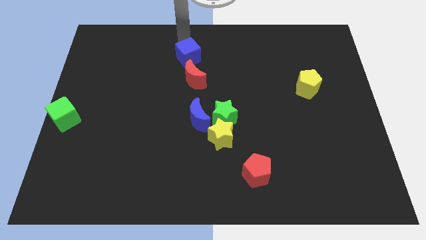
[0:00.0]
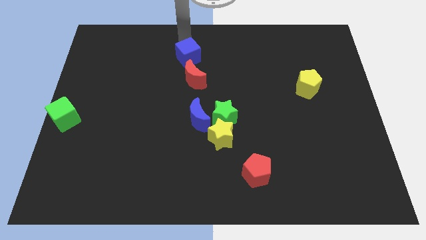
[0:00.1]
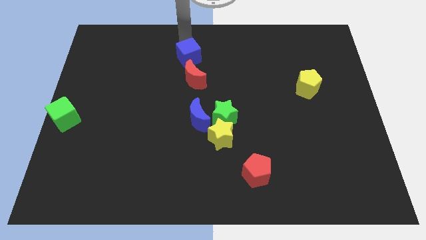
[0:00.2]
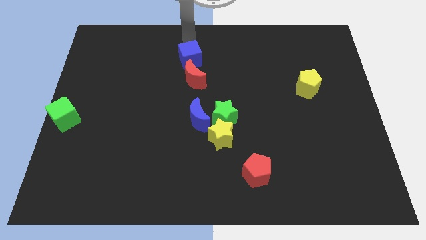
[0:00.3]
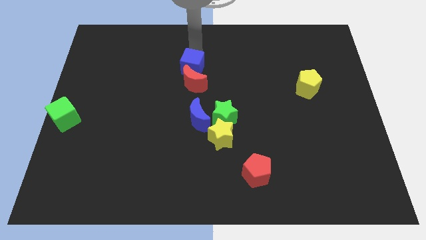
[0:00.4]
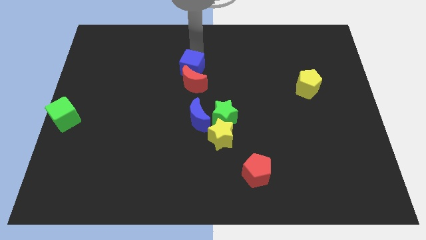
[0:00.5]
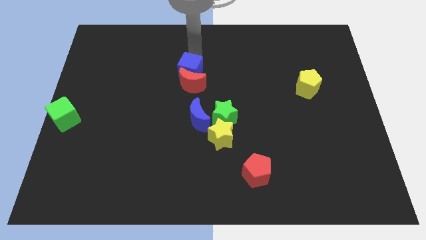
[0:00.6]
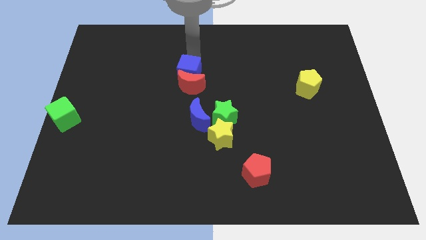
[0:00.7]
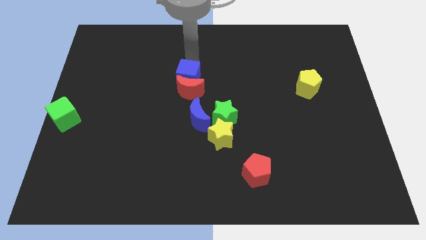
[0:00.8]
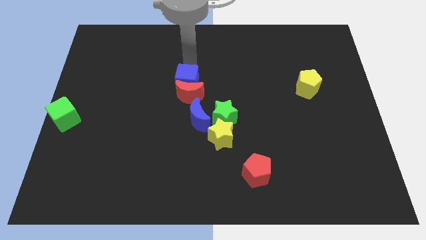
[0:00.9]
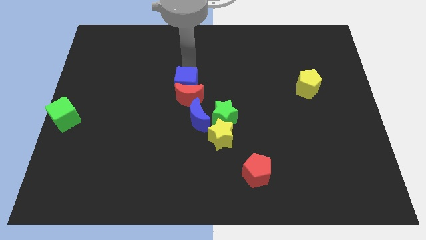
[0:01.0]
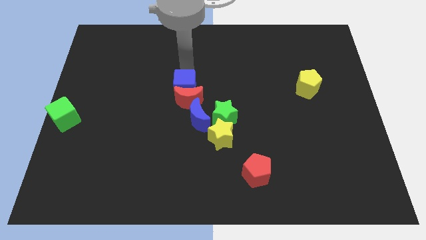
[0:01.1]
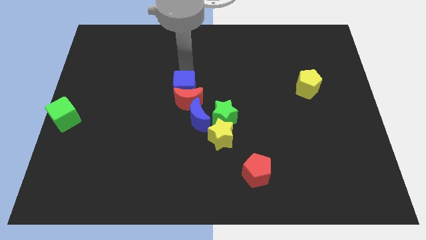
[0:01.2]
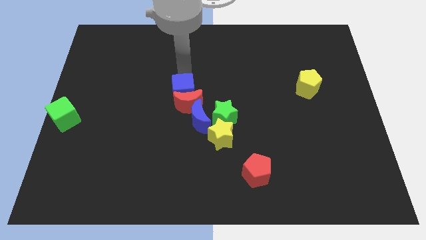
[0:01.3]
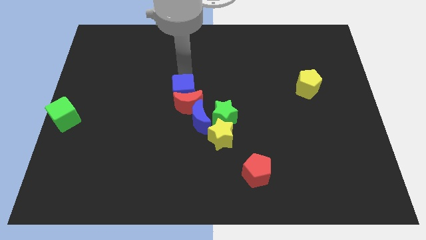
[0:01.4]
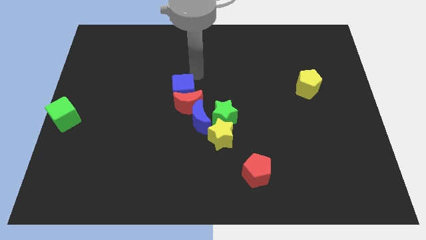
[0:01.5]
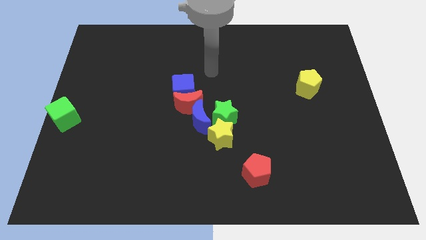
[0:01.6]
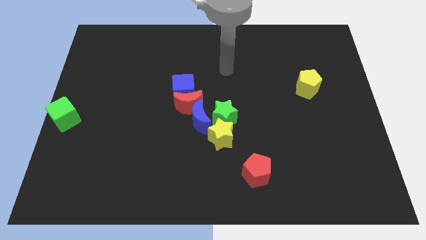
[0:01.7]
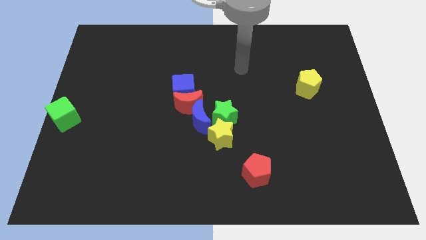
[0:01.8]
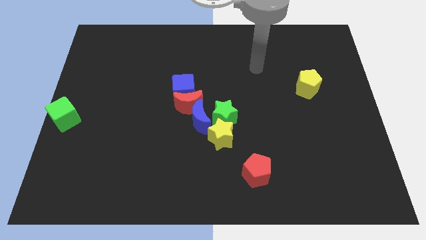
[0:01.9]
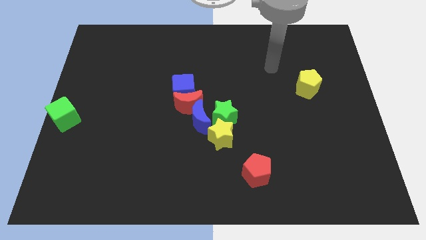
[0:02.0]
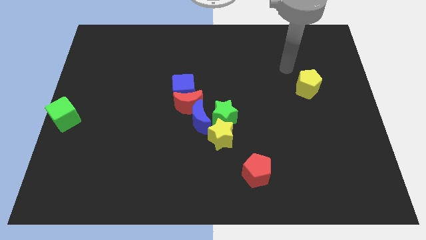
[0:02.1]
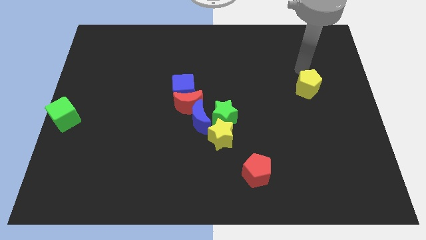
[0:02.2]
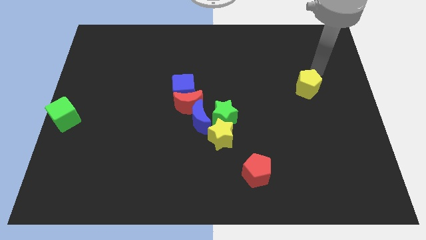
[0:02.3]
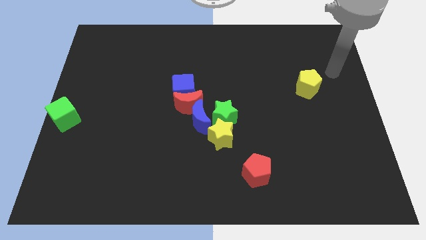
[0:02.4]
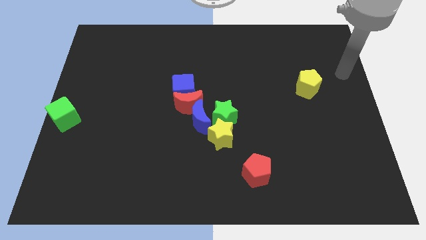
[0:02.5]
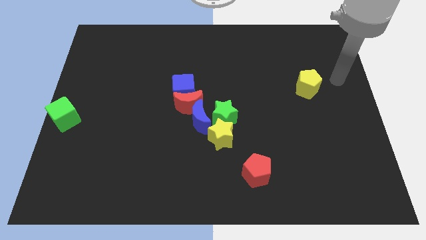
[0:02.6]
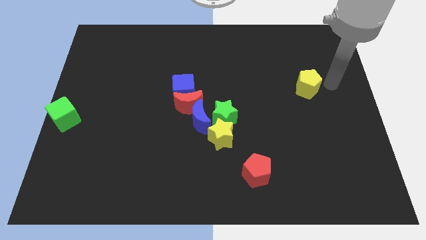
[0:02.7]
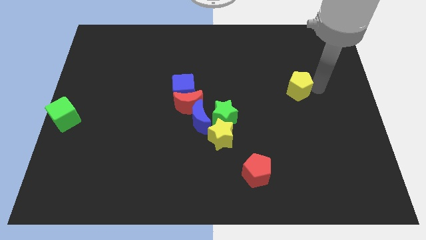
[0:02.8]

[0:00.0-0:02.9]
push the blue cube into the red crescent

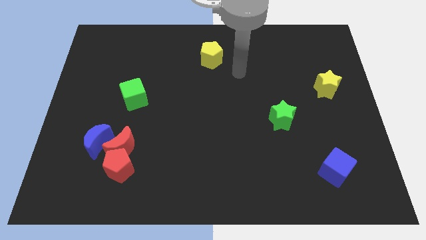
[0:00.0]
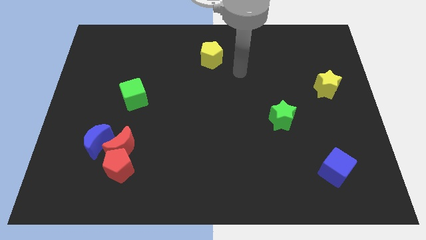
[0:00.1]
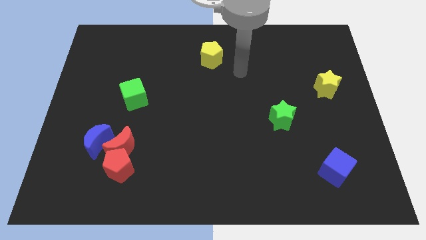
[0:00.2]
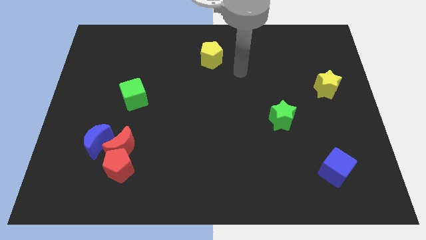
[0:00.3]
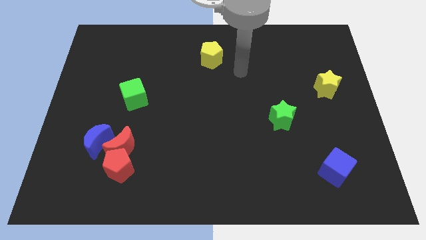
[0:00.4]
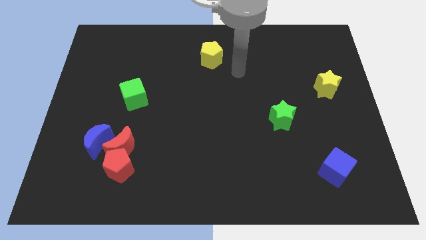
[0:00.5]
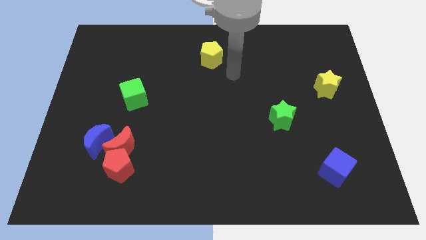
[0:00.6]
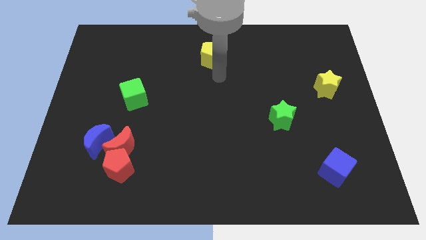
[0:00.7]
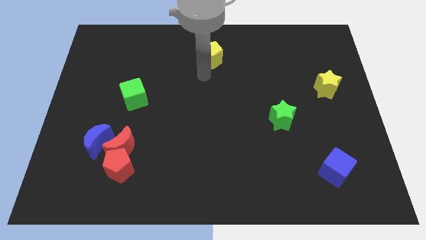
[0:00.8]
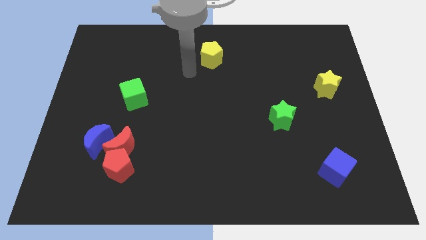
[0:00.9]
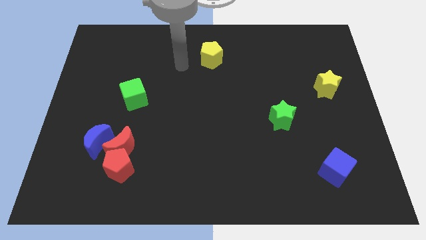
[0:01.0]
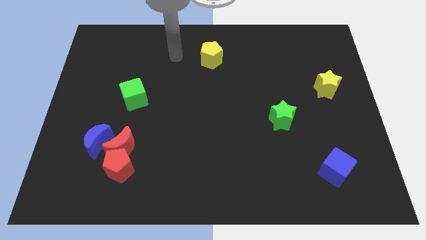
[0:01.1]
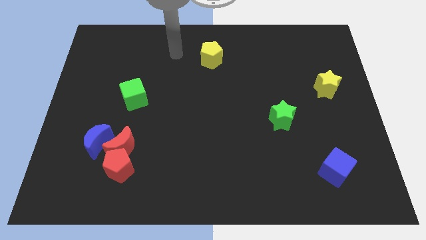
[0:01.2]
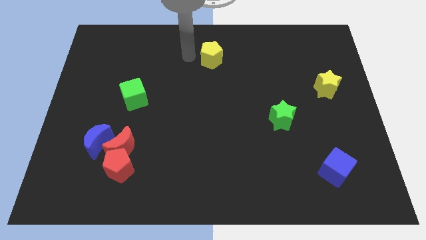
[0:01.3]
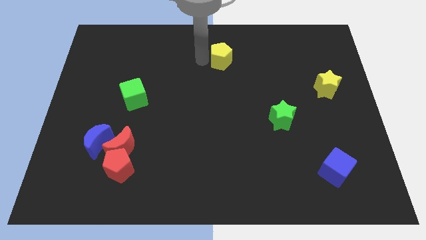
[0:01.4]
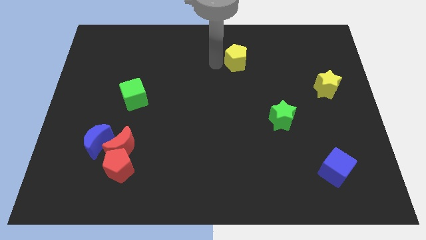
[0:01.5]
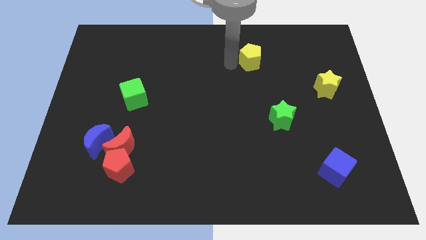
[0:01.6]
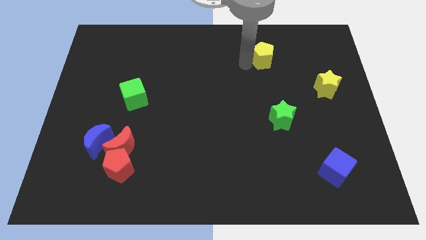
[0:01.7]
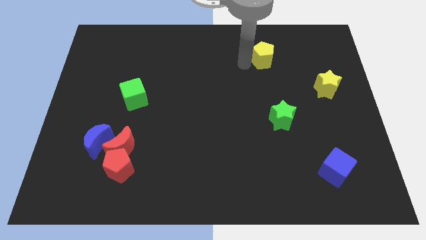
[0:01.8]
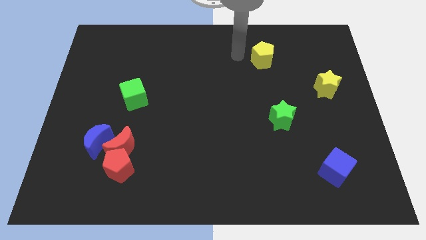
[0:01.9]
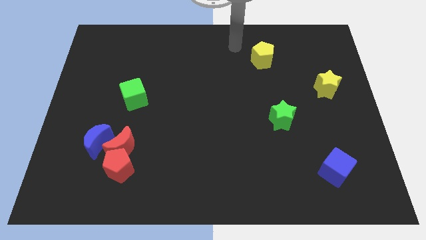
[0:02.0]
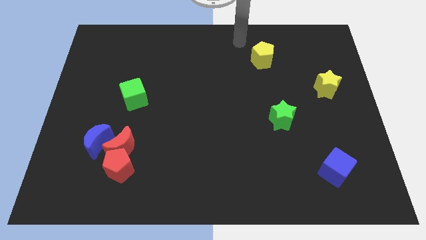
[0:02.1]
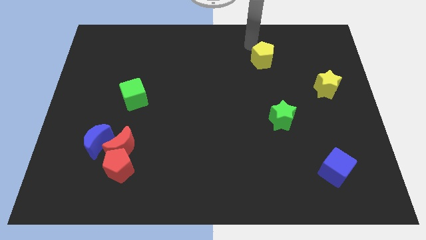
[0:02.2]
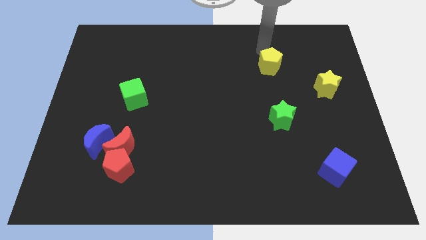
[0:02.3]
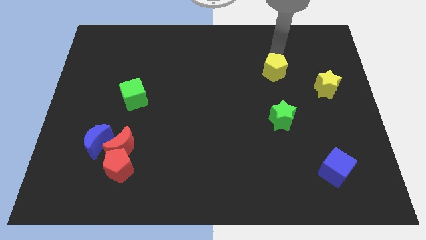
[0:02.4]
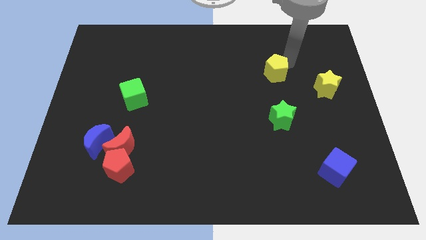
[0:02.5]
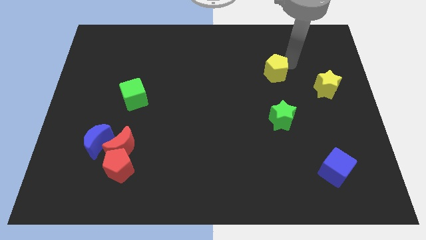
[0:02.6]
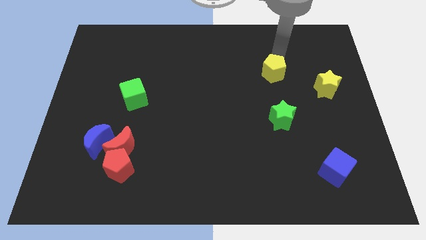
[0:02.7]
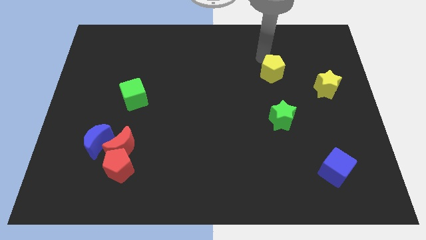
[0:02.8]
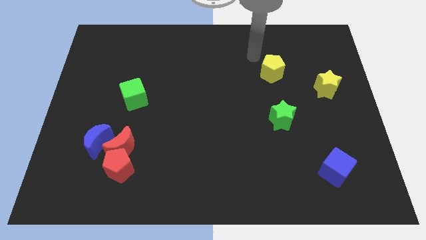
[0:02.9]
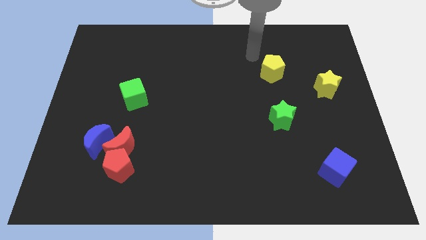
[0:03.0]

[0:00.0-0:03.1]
put the yellow pentagon at the top left side of the yellow star

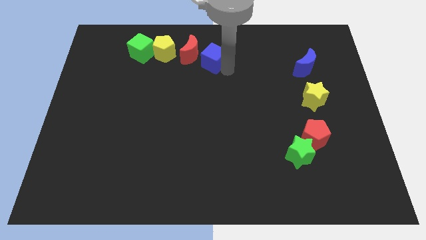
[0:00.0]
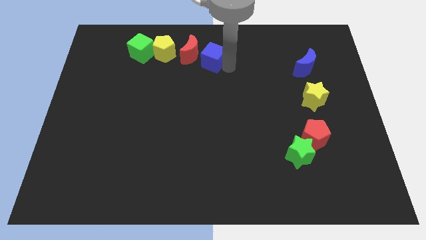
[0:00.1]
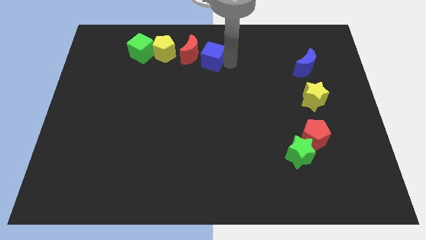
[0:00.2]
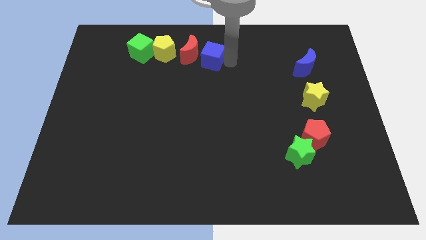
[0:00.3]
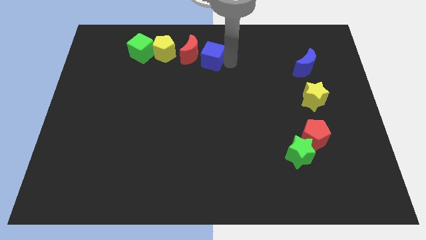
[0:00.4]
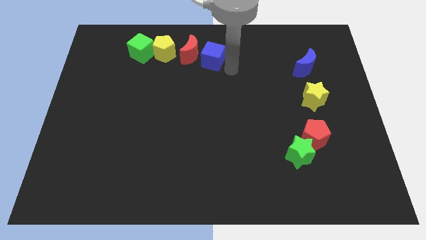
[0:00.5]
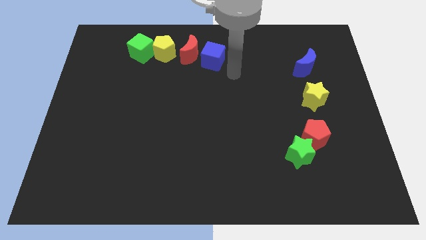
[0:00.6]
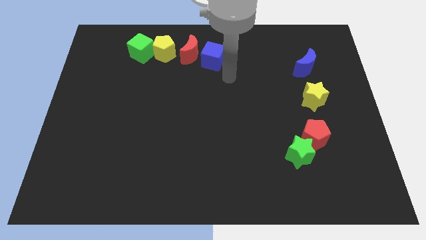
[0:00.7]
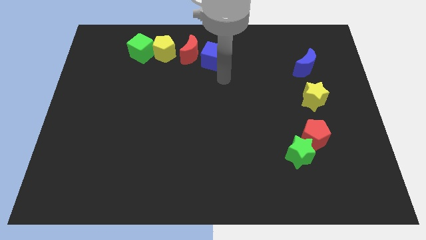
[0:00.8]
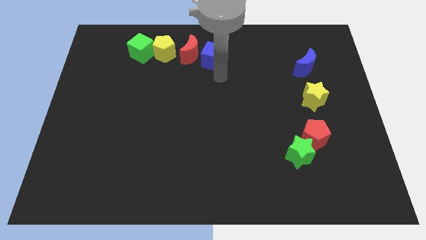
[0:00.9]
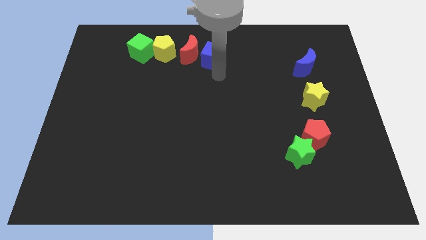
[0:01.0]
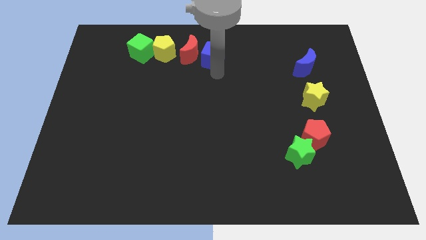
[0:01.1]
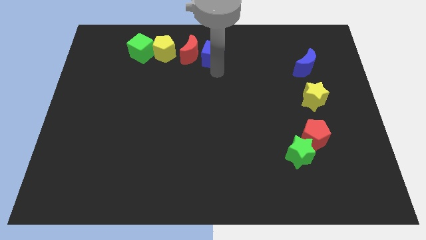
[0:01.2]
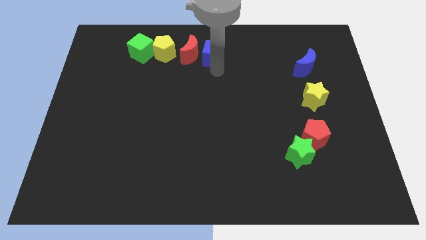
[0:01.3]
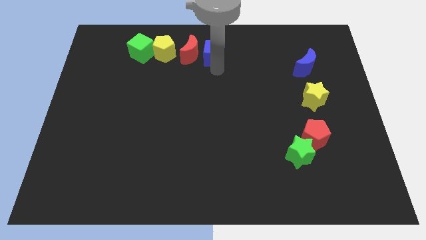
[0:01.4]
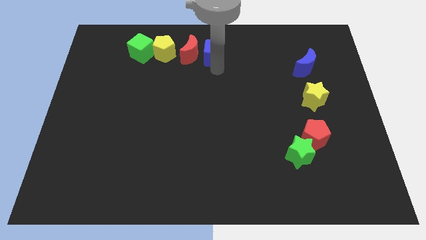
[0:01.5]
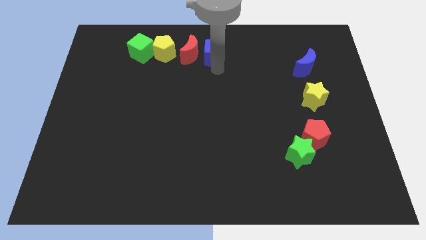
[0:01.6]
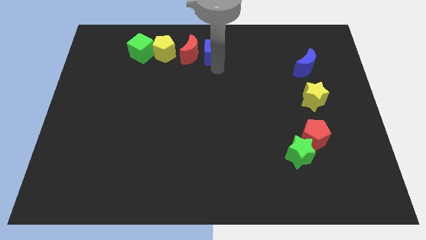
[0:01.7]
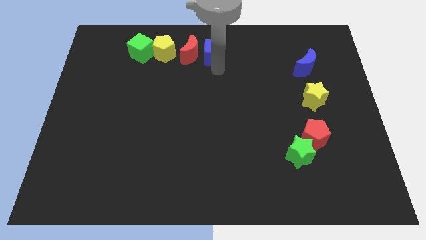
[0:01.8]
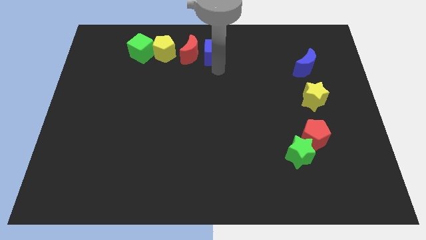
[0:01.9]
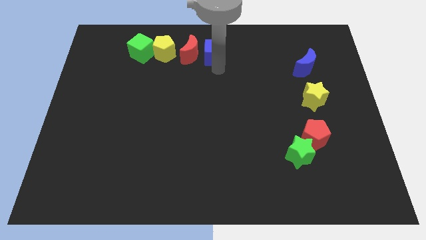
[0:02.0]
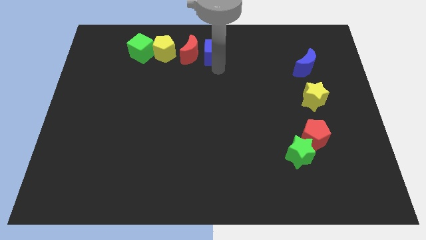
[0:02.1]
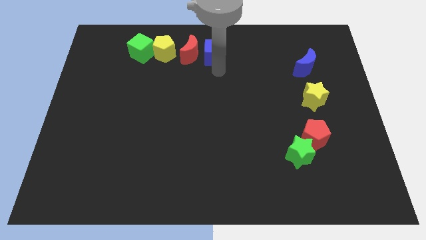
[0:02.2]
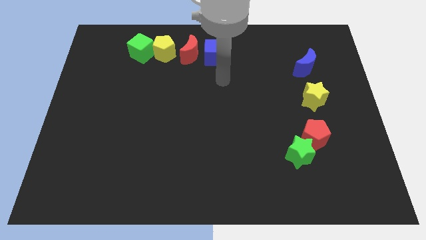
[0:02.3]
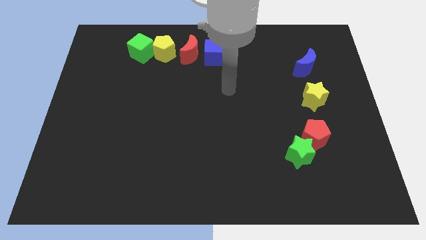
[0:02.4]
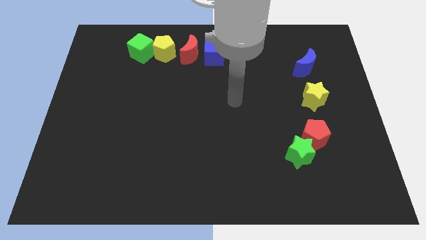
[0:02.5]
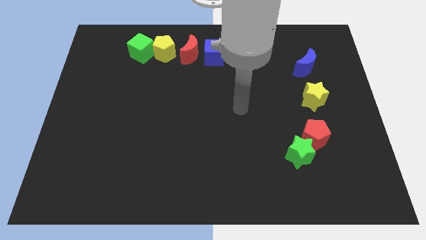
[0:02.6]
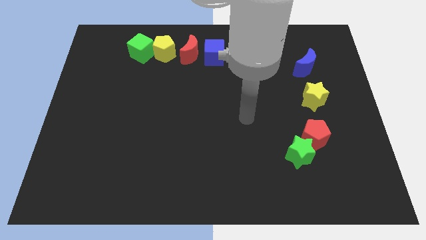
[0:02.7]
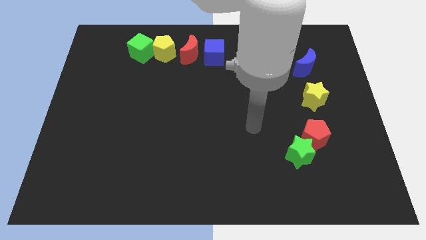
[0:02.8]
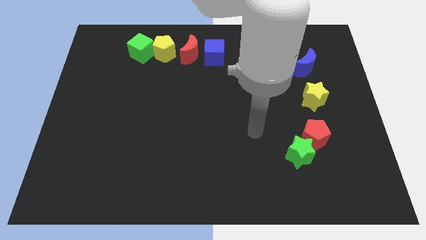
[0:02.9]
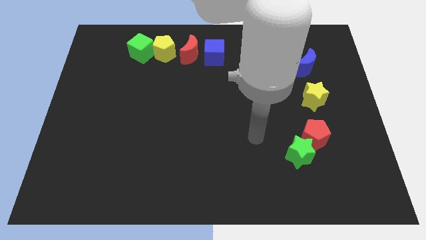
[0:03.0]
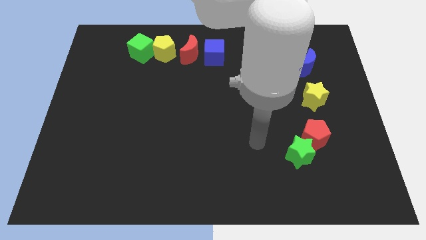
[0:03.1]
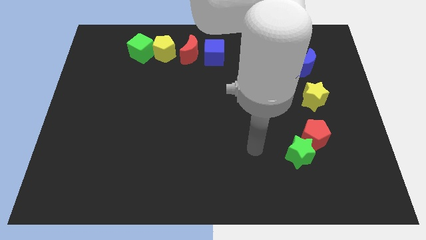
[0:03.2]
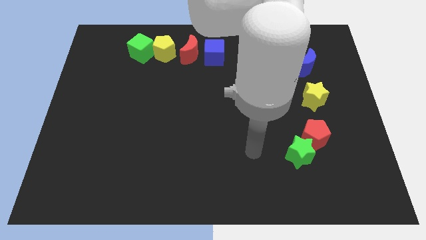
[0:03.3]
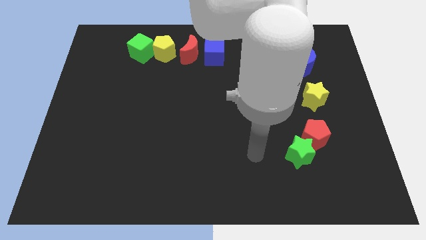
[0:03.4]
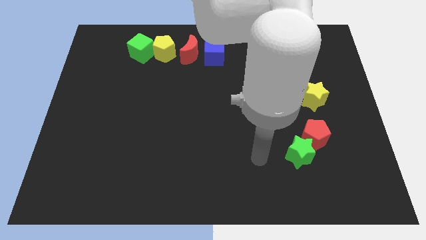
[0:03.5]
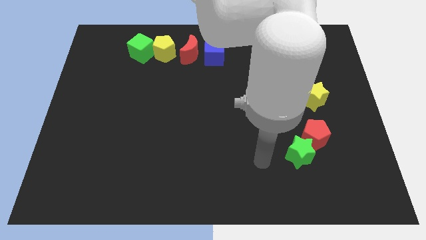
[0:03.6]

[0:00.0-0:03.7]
slightly move the blue cube to the top center of the board
